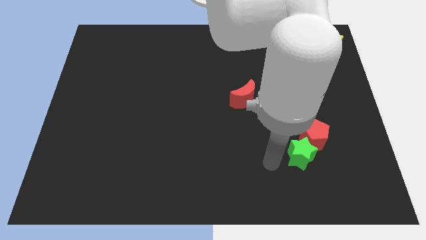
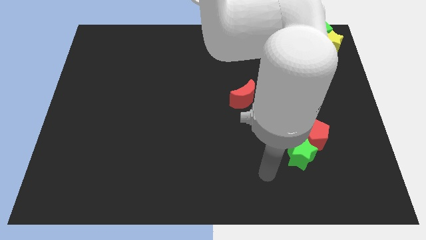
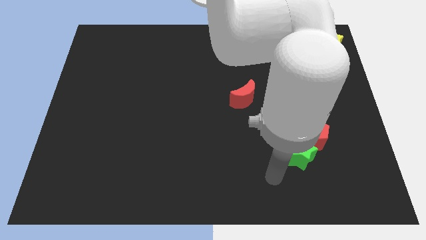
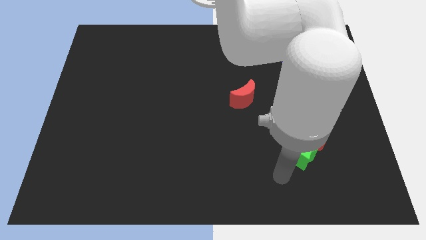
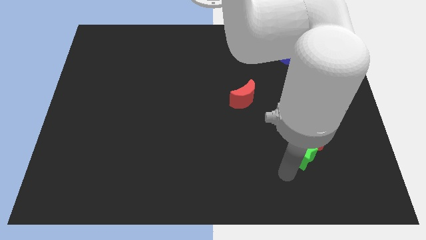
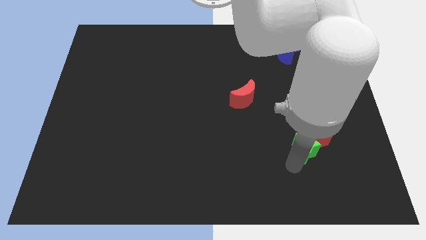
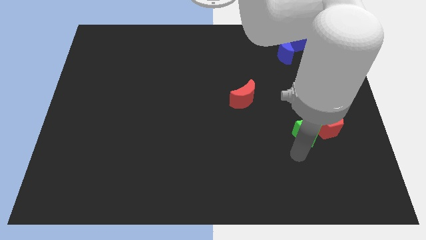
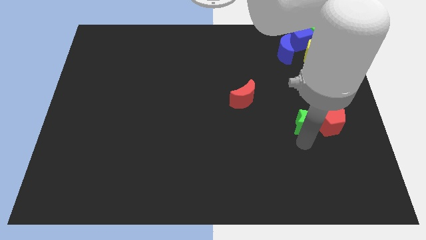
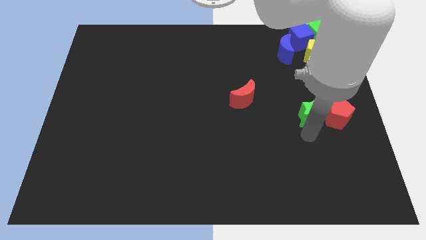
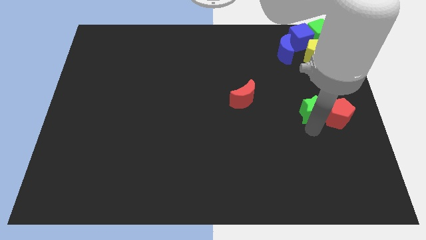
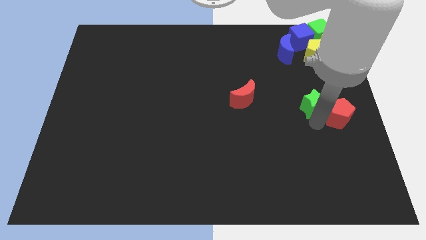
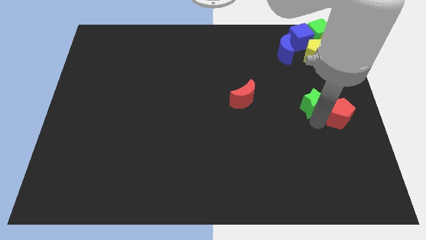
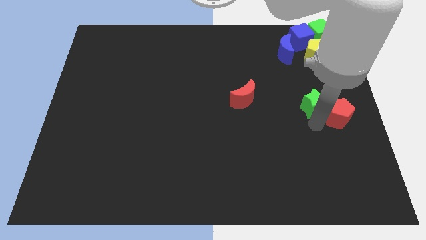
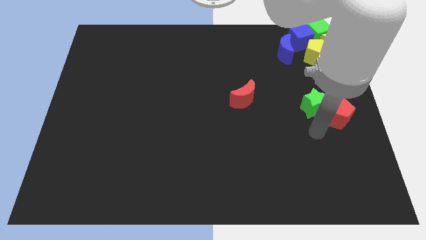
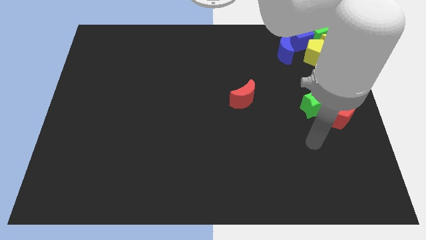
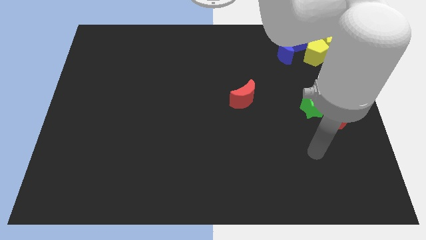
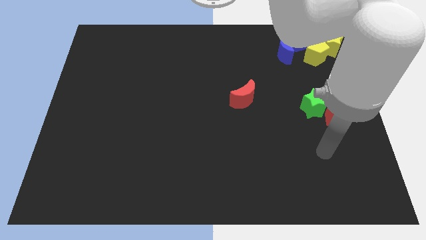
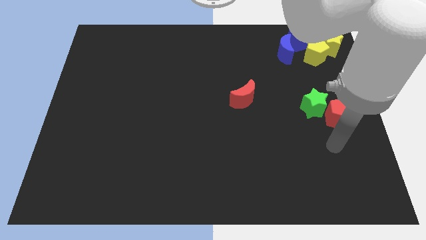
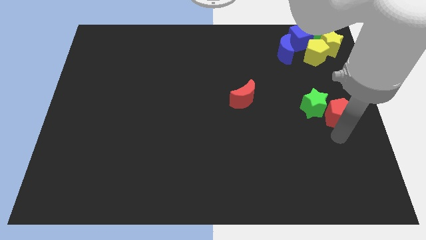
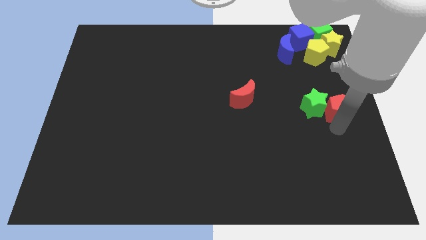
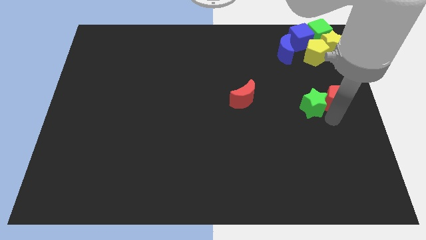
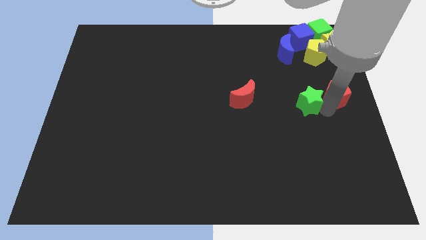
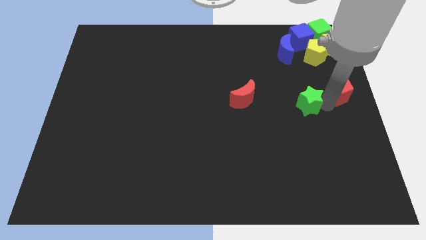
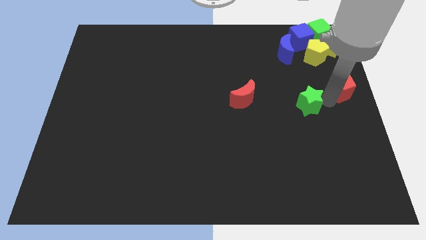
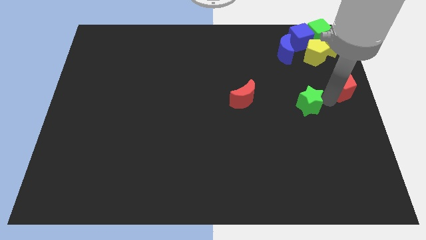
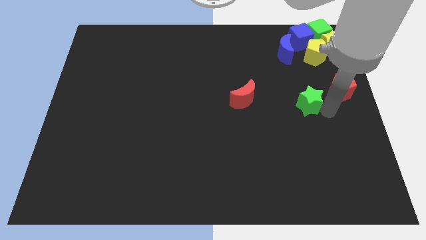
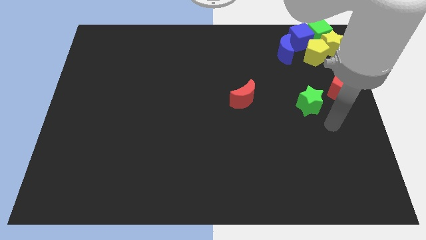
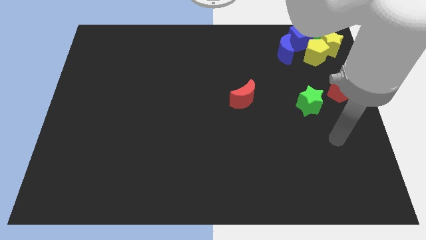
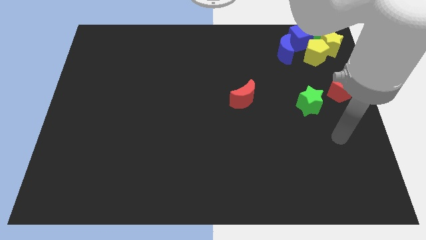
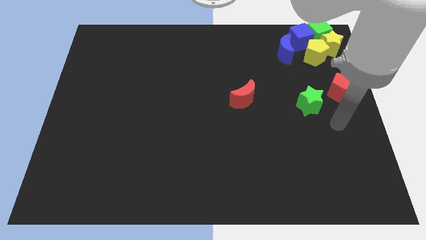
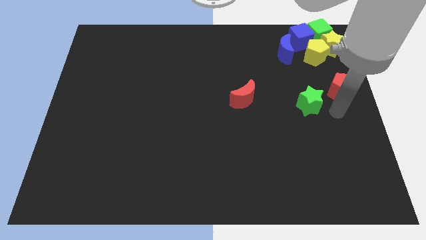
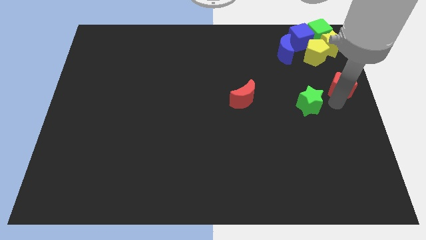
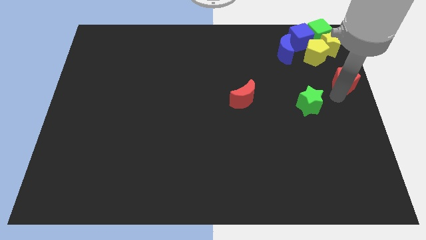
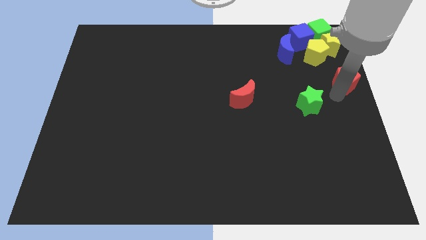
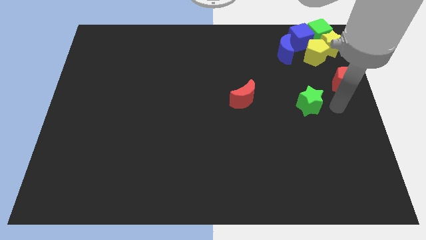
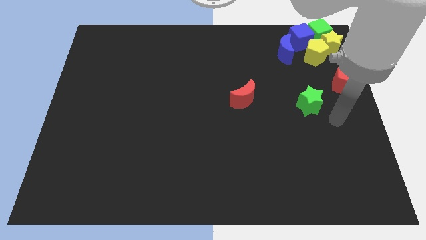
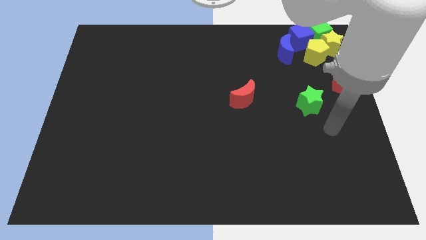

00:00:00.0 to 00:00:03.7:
separate the red pentagon from the green star

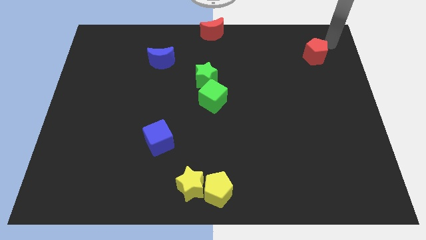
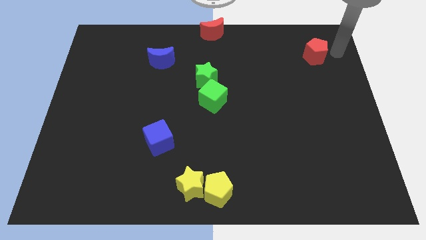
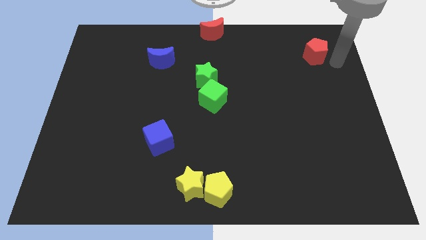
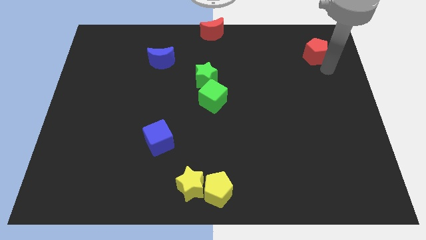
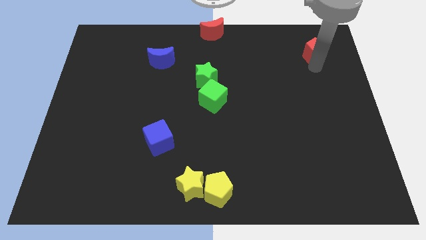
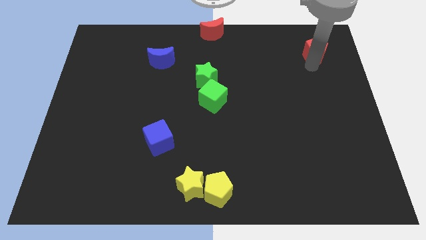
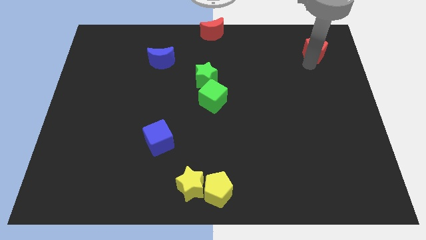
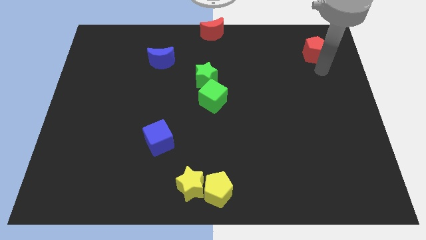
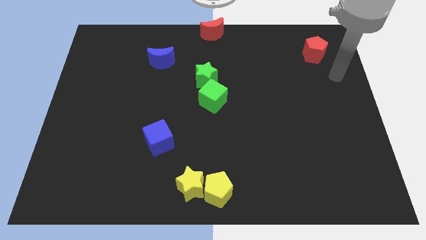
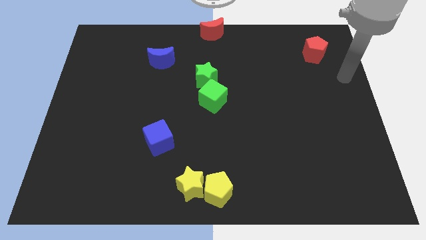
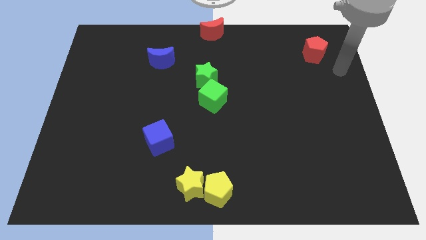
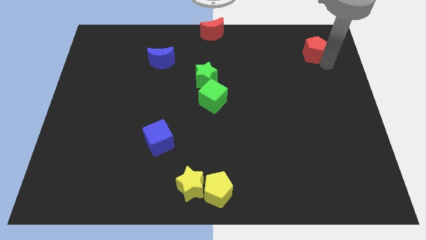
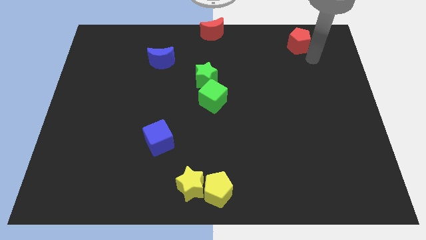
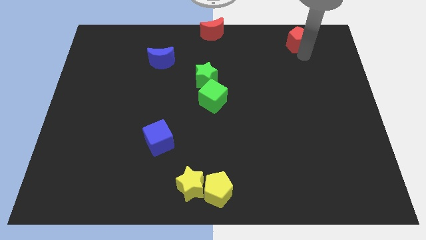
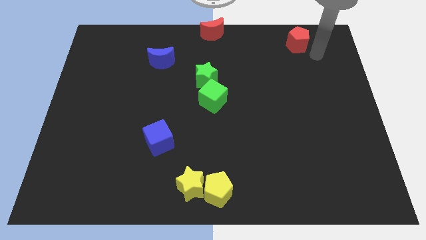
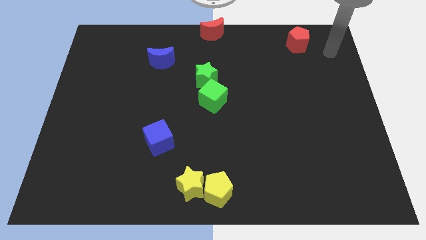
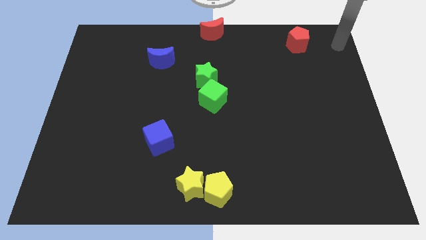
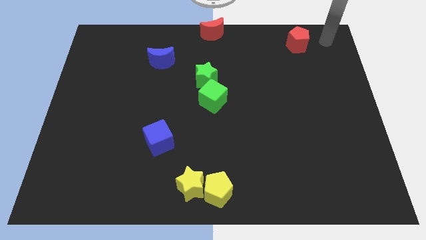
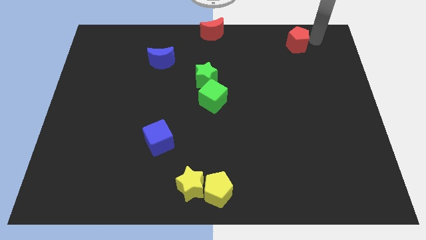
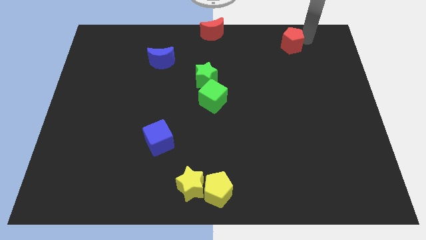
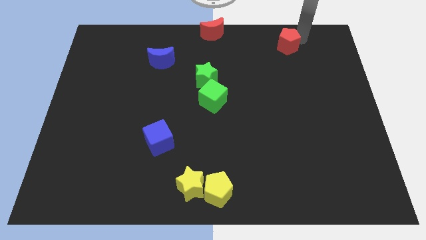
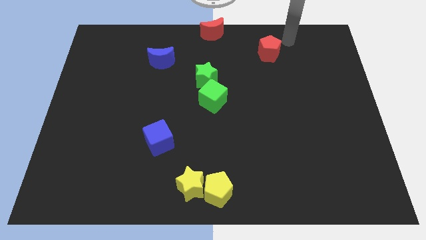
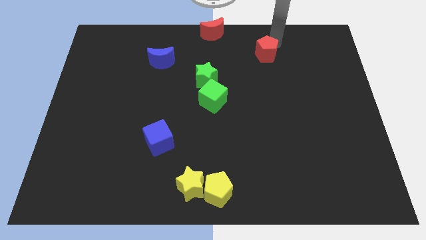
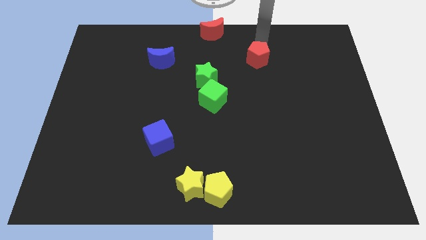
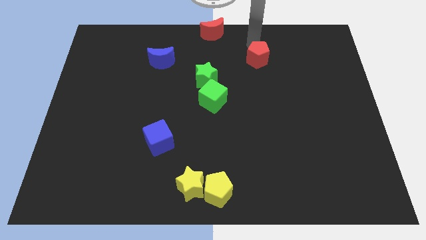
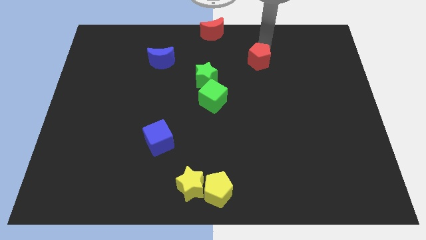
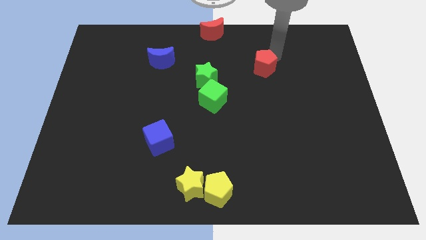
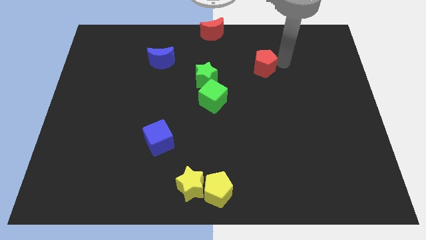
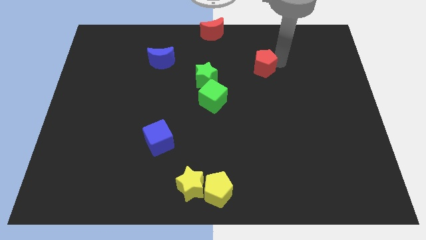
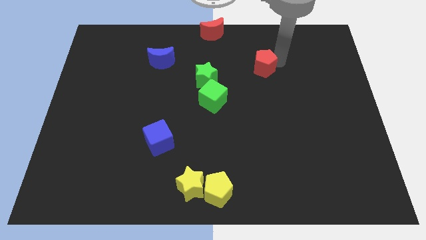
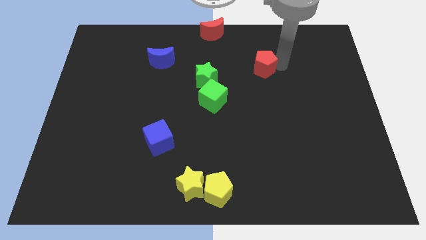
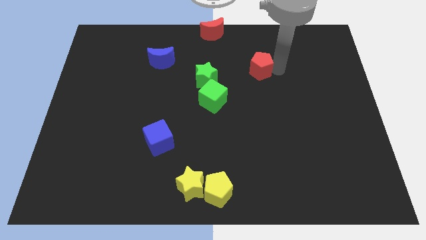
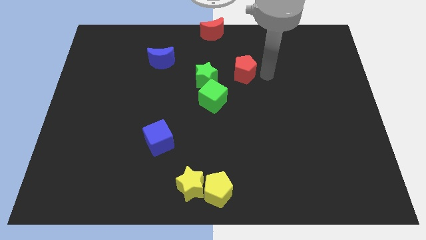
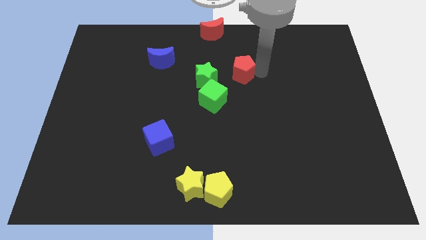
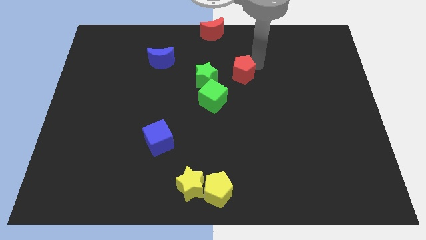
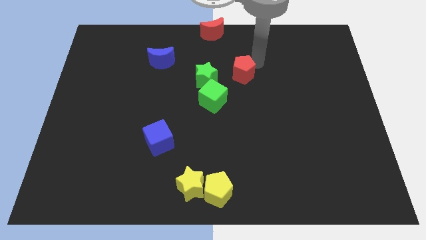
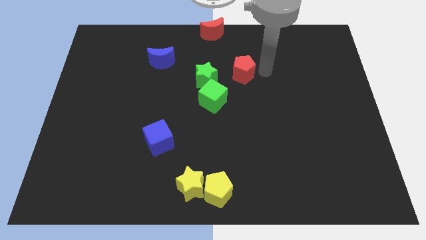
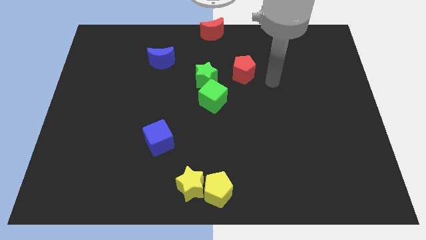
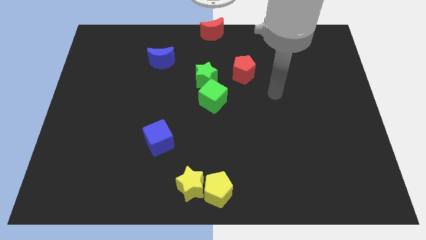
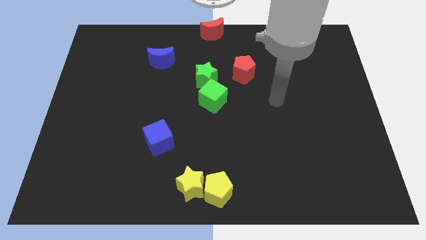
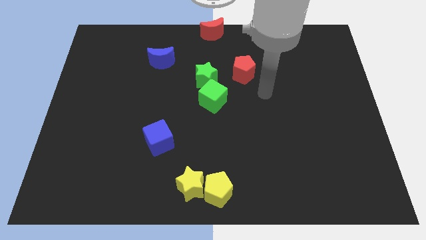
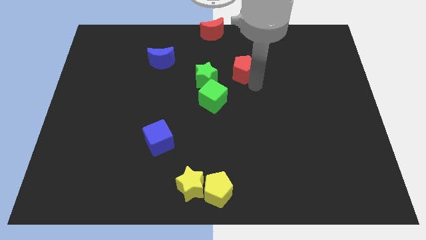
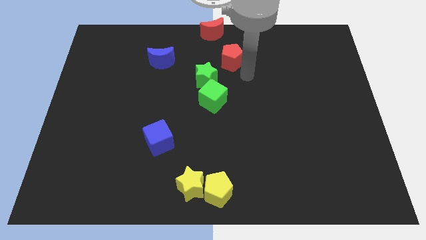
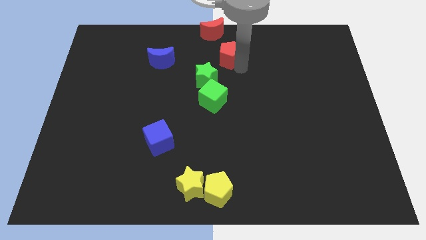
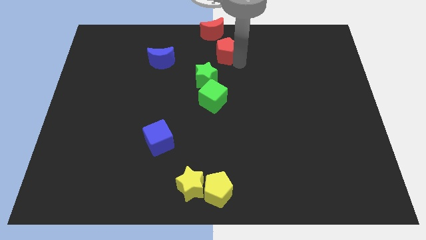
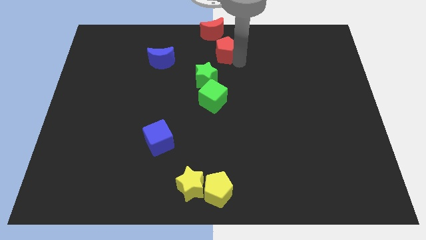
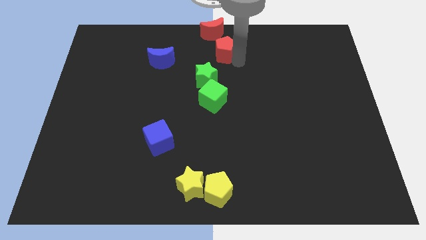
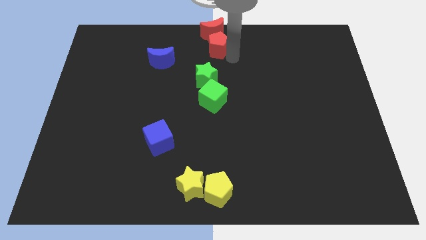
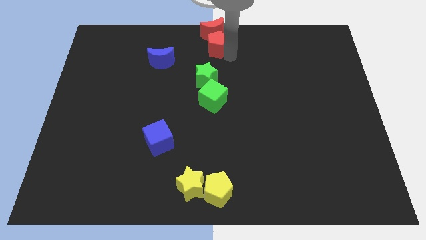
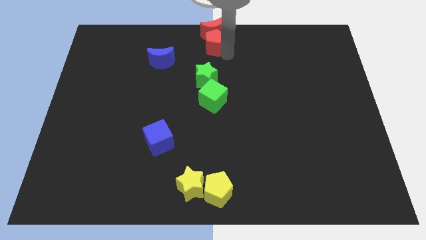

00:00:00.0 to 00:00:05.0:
move the red pentagon below the red crescent

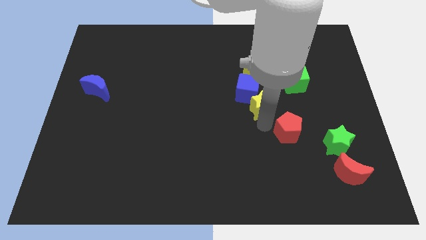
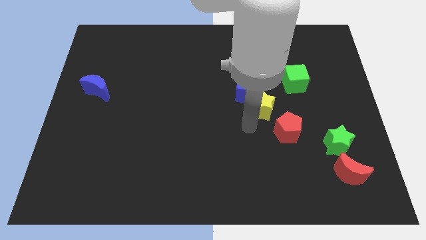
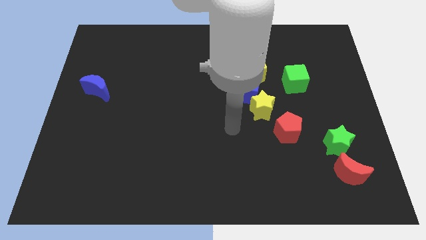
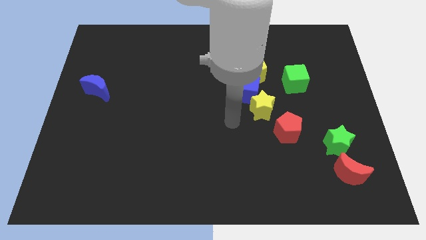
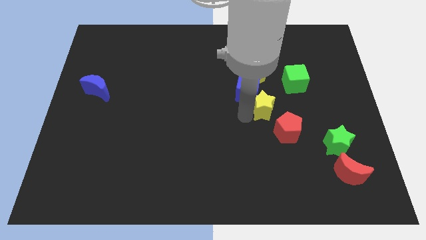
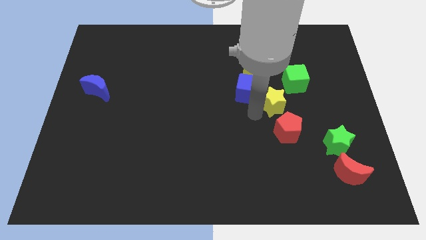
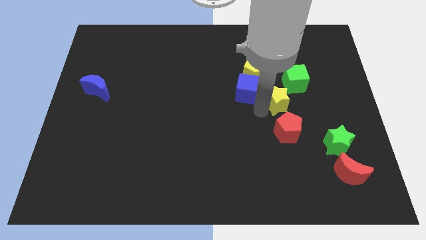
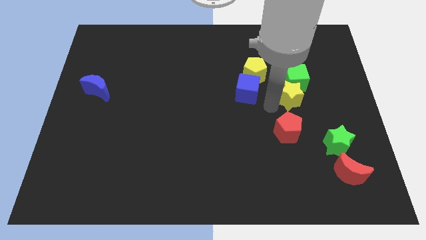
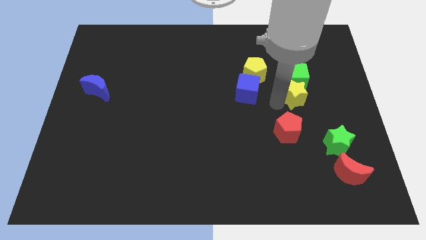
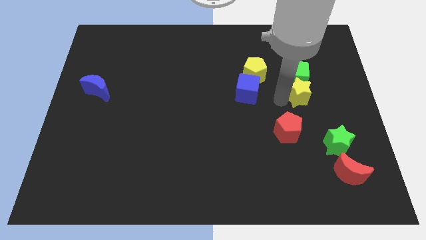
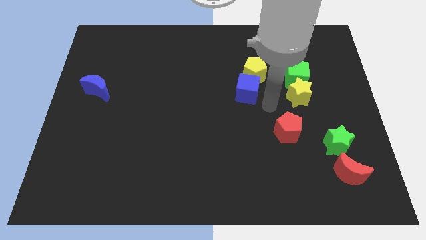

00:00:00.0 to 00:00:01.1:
place yellow star to the bottom of green cube
